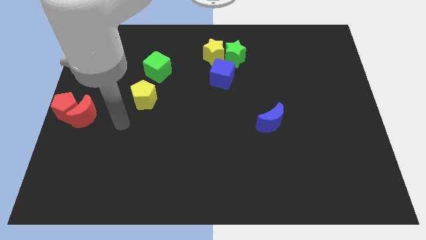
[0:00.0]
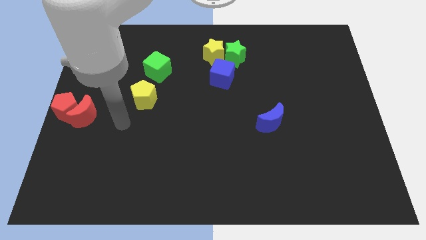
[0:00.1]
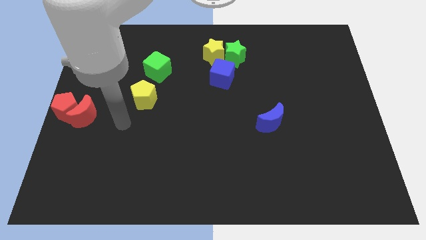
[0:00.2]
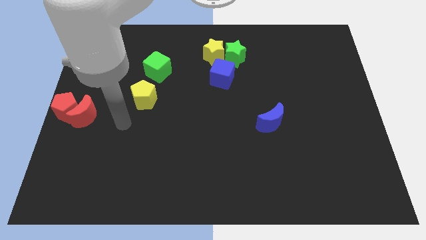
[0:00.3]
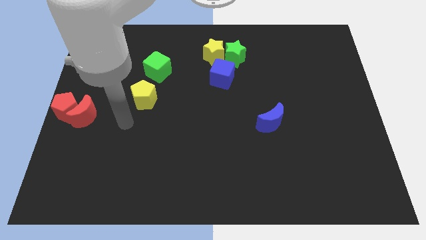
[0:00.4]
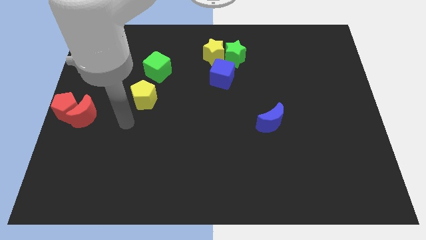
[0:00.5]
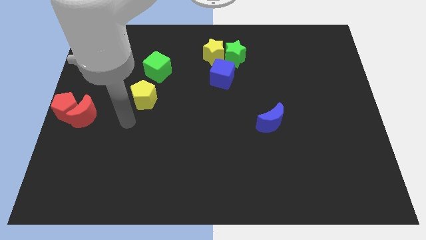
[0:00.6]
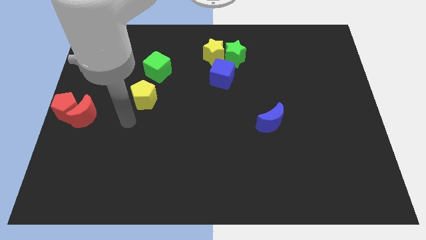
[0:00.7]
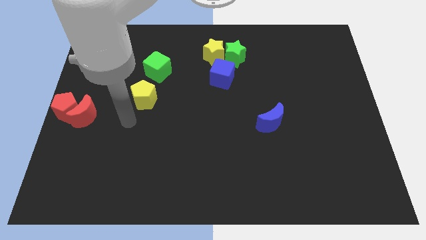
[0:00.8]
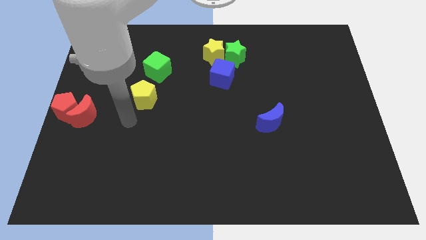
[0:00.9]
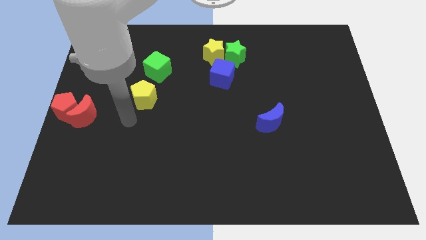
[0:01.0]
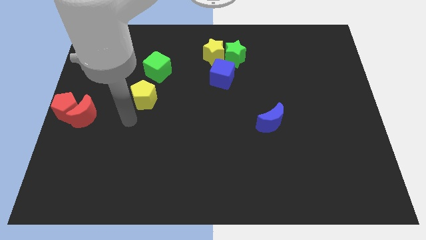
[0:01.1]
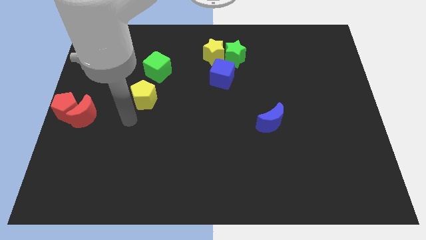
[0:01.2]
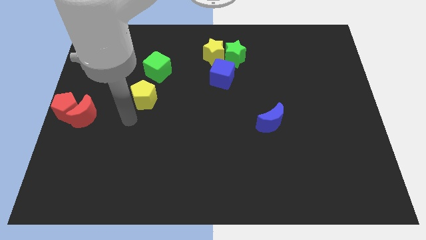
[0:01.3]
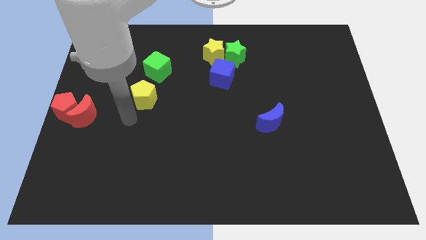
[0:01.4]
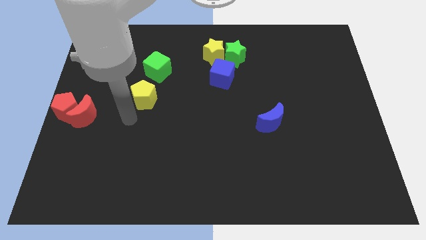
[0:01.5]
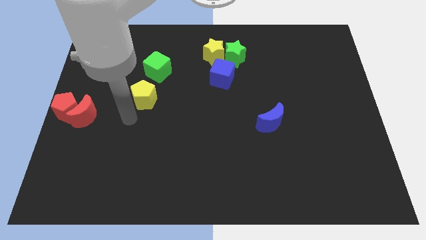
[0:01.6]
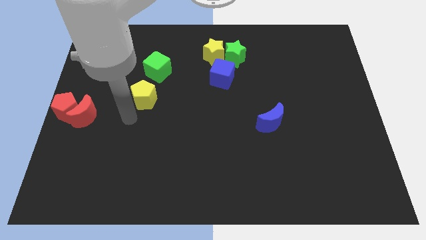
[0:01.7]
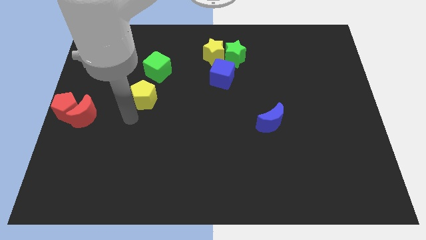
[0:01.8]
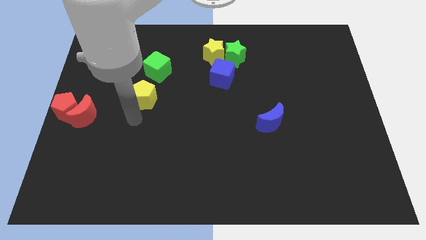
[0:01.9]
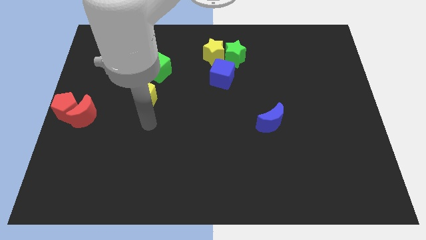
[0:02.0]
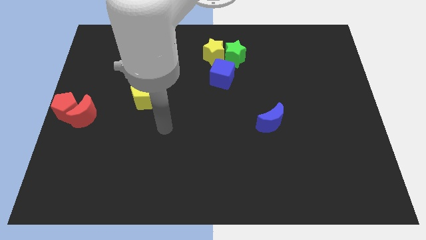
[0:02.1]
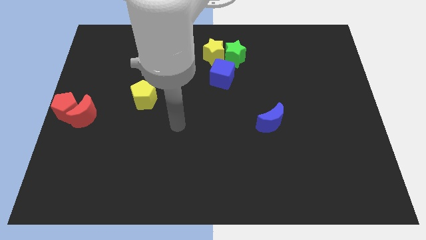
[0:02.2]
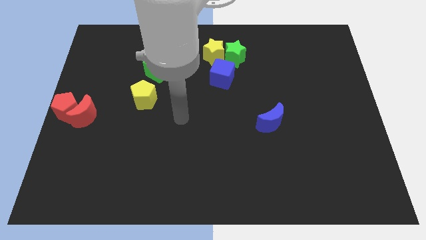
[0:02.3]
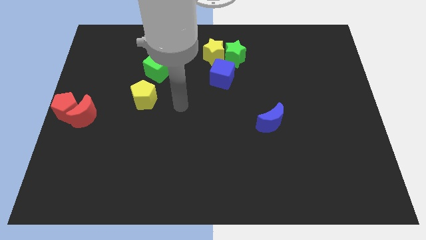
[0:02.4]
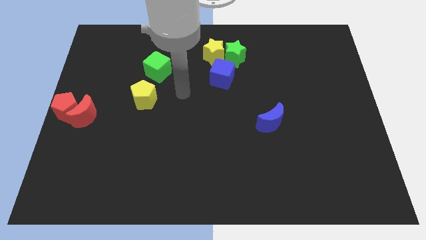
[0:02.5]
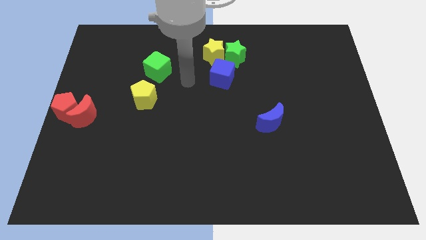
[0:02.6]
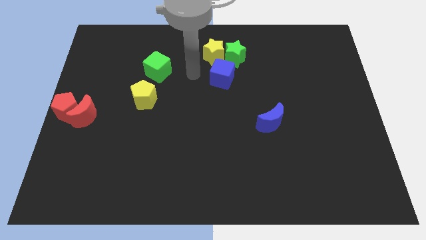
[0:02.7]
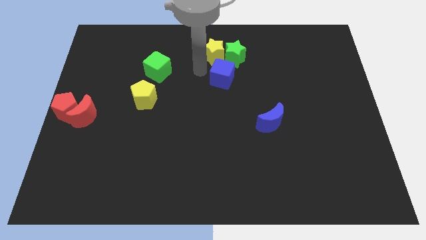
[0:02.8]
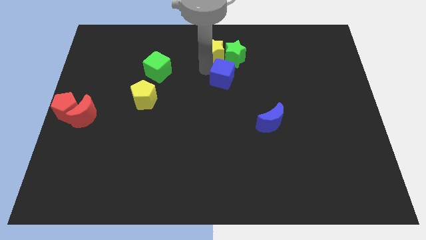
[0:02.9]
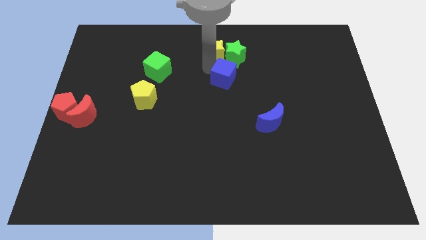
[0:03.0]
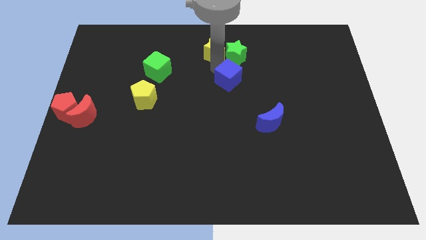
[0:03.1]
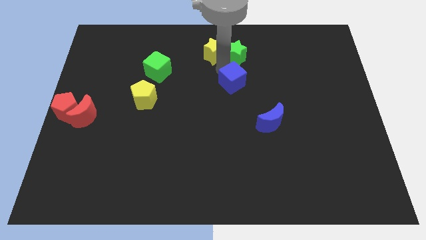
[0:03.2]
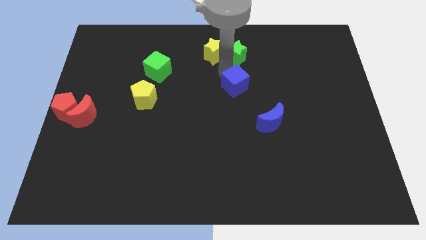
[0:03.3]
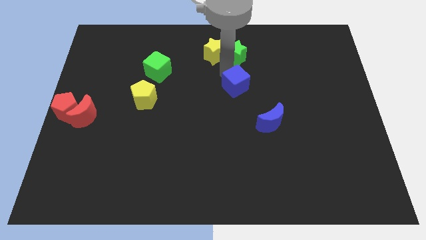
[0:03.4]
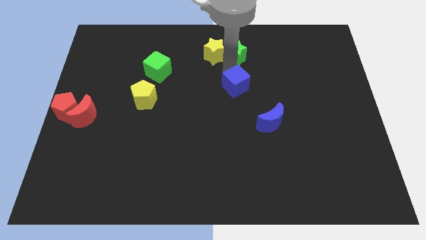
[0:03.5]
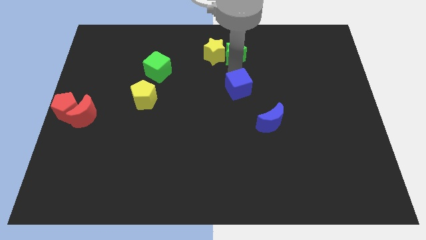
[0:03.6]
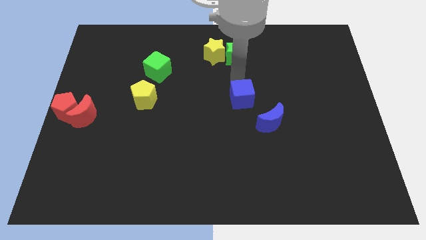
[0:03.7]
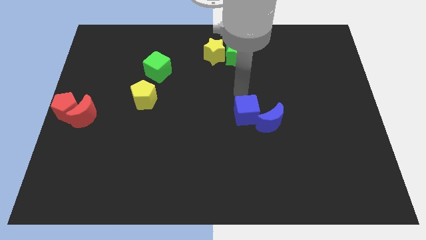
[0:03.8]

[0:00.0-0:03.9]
move blue cube into the blue moon

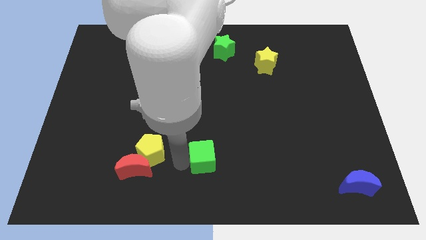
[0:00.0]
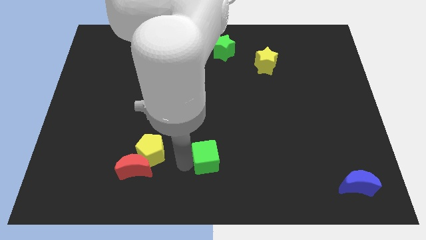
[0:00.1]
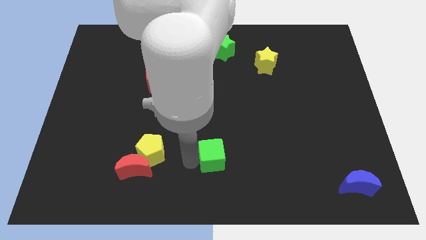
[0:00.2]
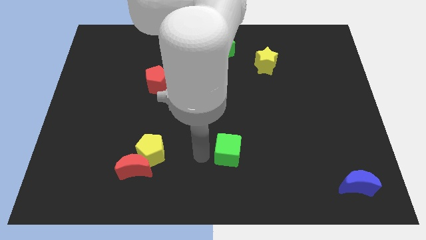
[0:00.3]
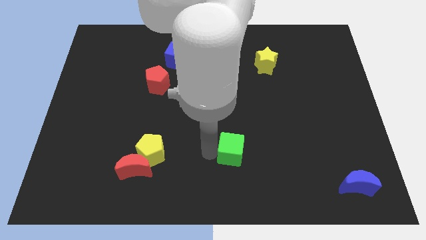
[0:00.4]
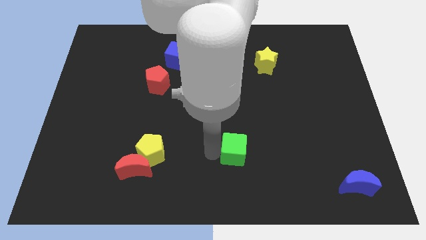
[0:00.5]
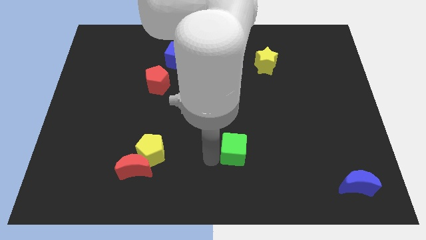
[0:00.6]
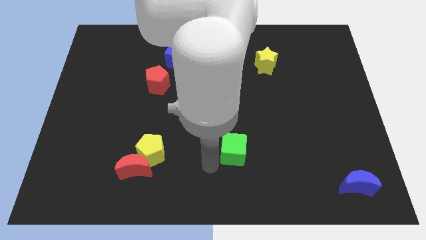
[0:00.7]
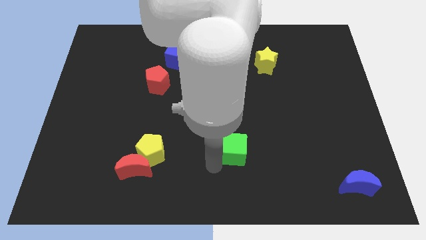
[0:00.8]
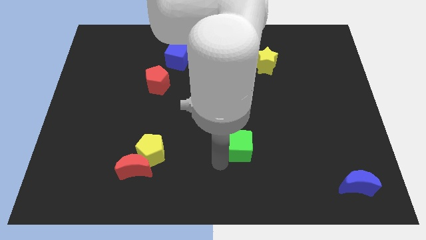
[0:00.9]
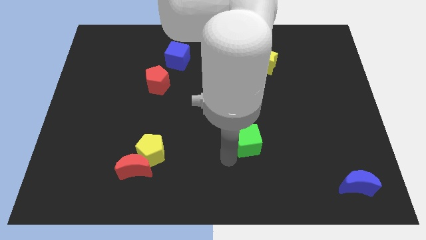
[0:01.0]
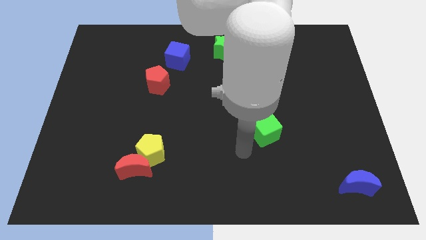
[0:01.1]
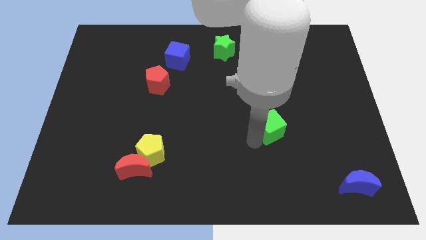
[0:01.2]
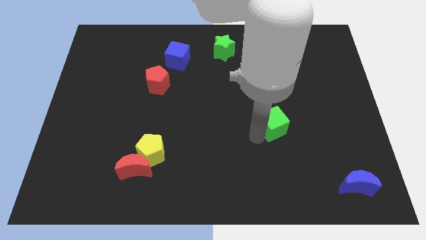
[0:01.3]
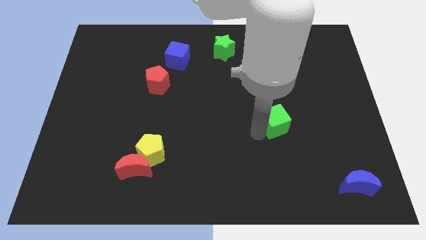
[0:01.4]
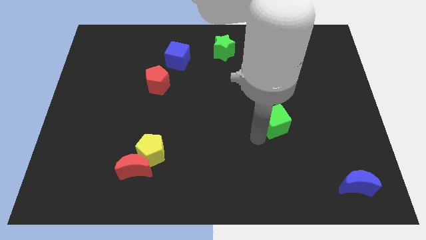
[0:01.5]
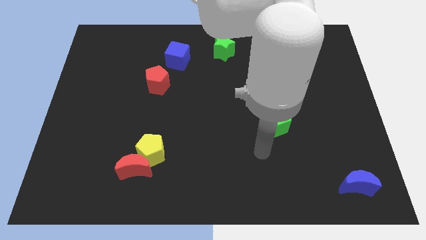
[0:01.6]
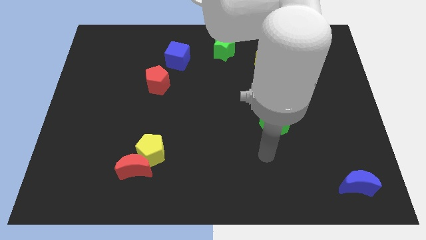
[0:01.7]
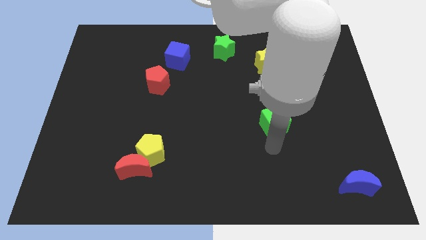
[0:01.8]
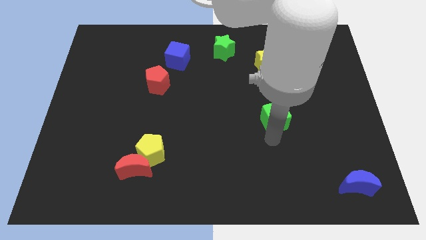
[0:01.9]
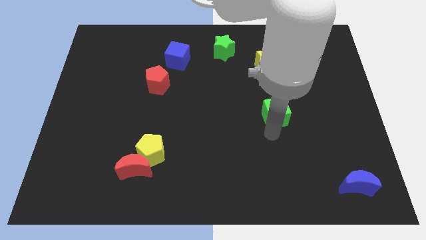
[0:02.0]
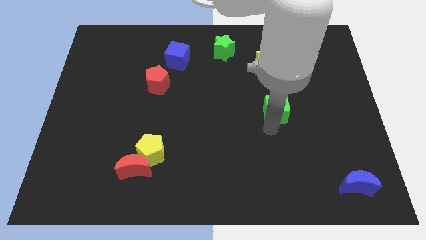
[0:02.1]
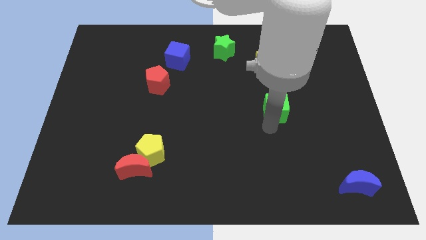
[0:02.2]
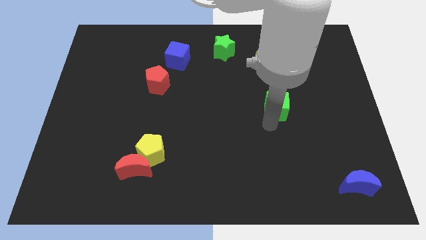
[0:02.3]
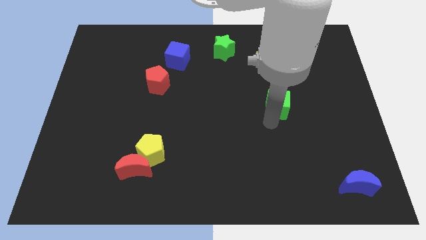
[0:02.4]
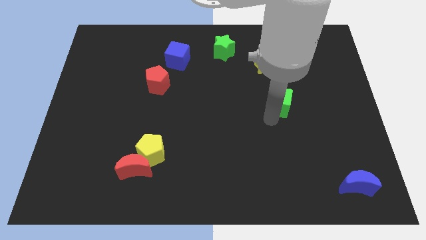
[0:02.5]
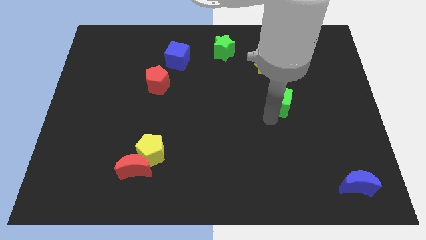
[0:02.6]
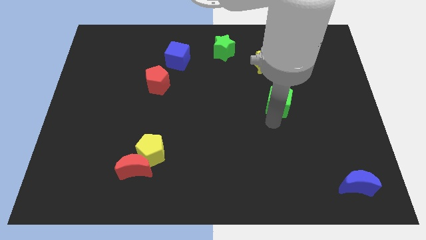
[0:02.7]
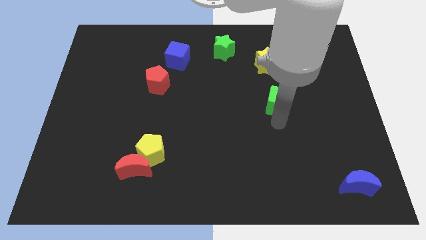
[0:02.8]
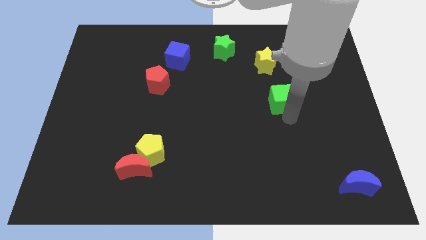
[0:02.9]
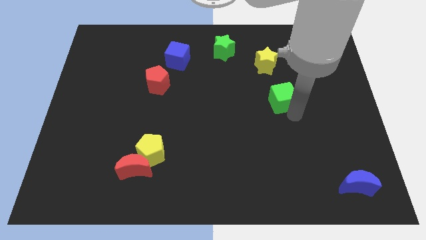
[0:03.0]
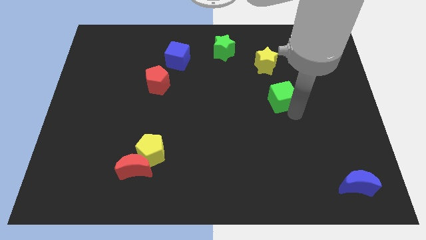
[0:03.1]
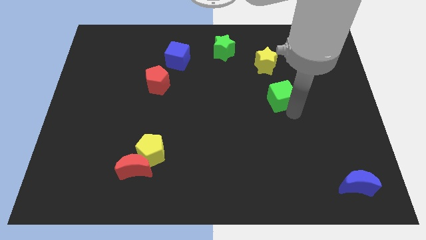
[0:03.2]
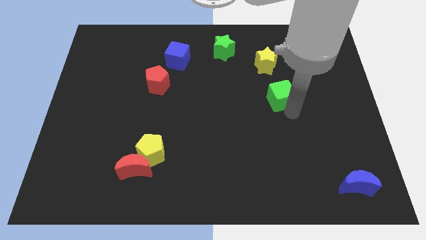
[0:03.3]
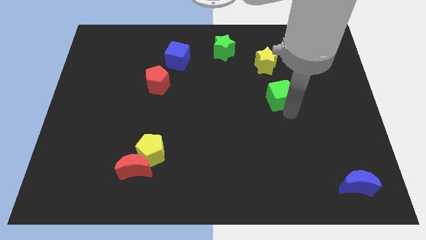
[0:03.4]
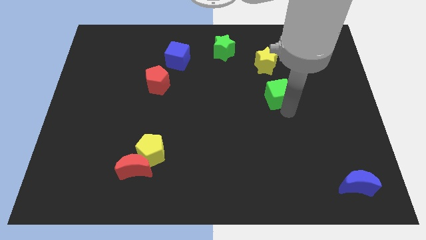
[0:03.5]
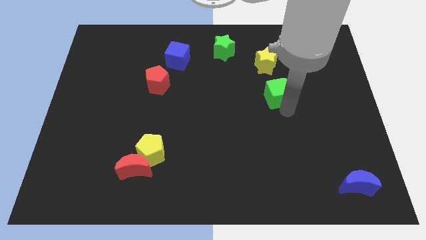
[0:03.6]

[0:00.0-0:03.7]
place the green cube to the right of the red pentagon

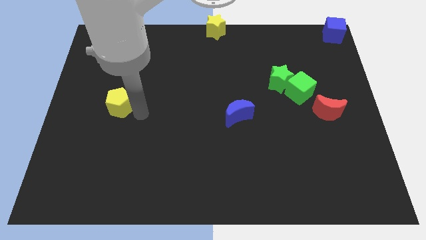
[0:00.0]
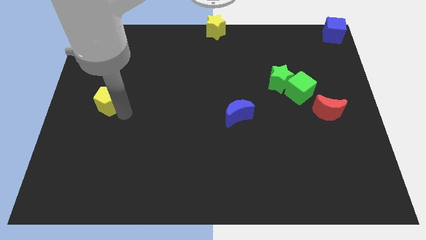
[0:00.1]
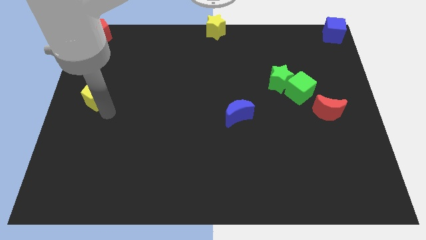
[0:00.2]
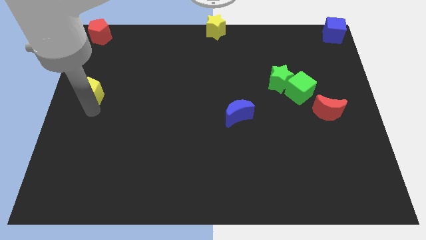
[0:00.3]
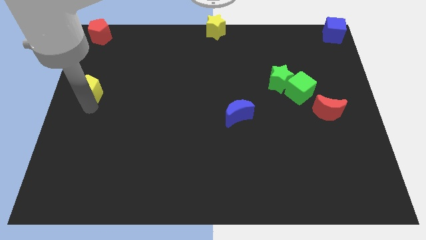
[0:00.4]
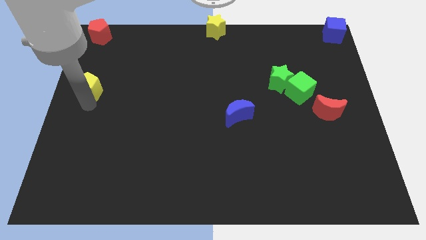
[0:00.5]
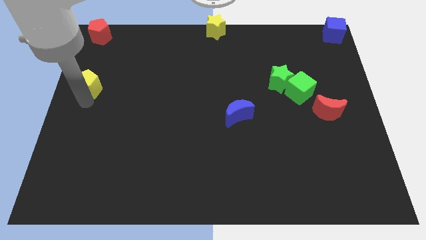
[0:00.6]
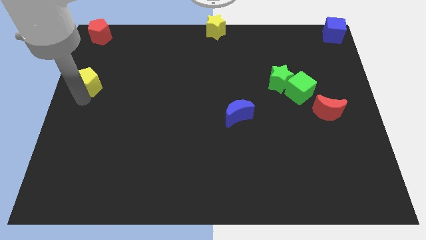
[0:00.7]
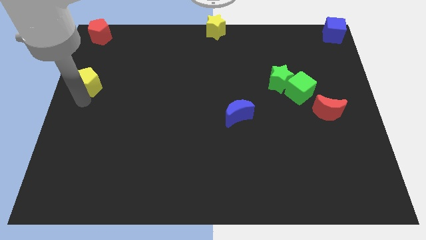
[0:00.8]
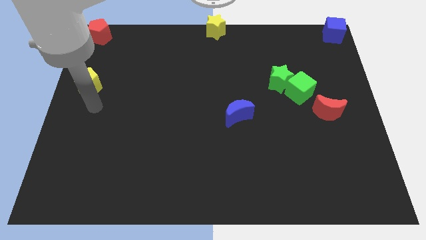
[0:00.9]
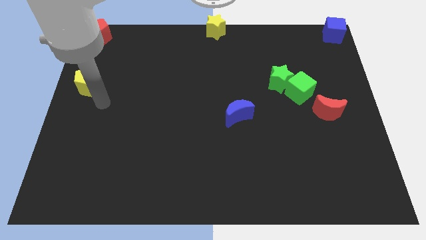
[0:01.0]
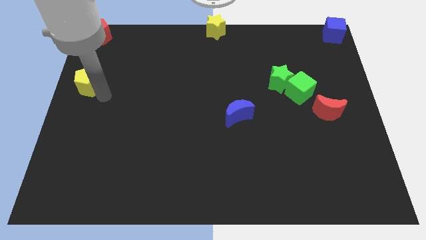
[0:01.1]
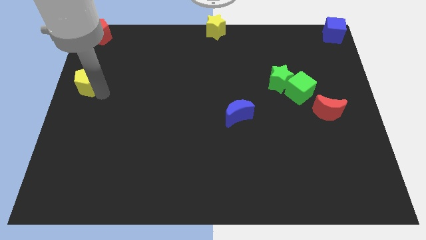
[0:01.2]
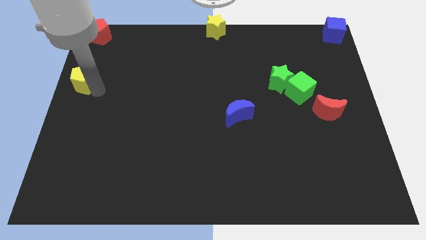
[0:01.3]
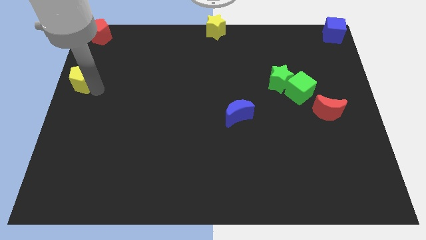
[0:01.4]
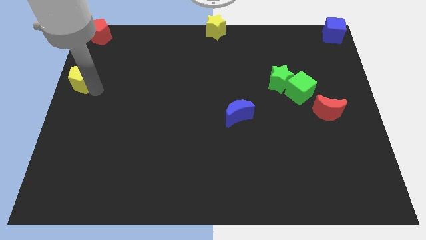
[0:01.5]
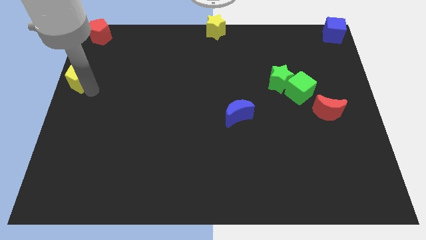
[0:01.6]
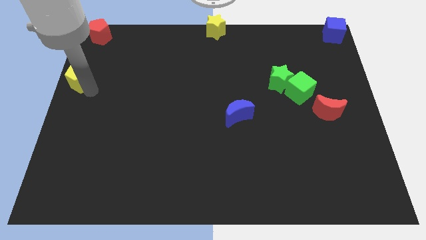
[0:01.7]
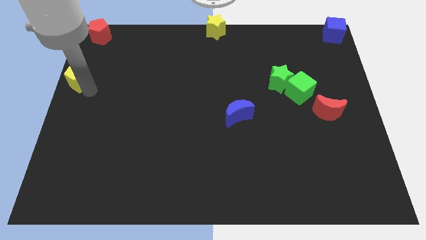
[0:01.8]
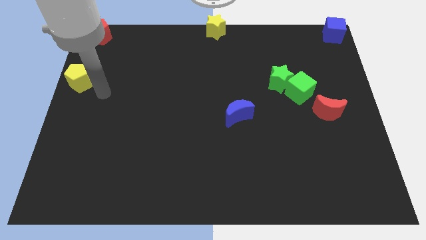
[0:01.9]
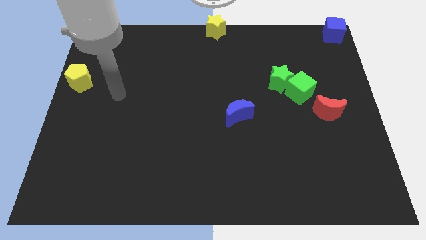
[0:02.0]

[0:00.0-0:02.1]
place the yellow pentagon middle left to the board
